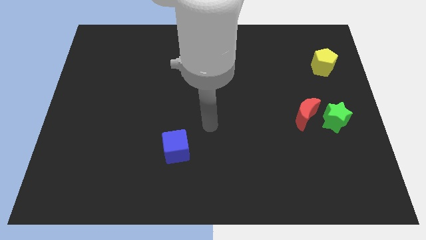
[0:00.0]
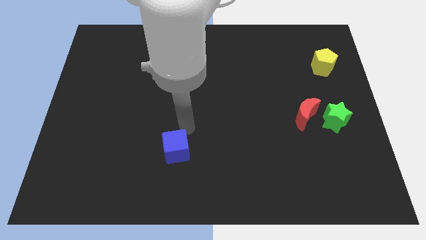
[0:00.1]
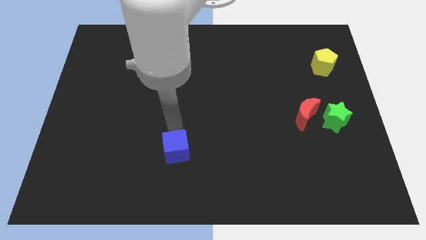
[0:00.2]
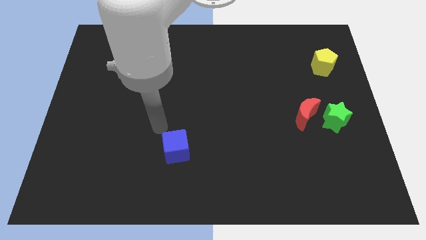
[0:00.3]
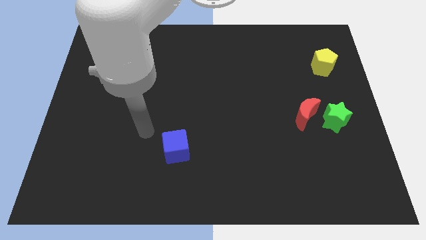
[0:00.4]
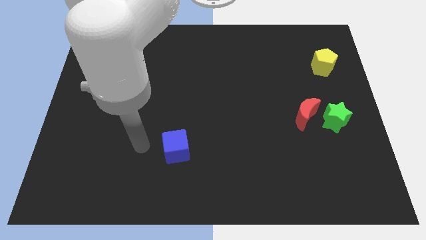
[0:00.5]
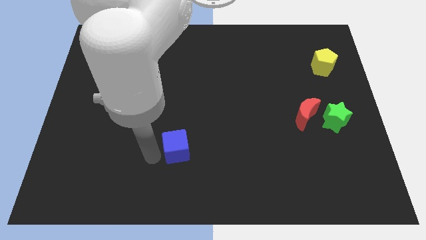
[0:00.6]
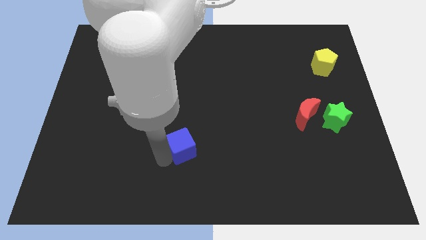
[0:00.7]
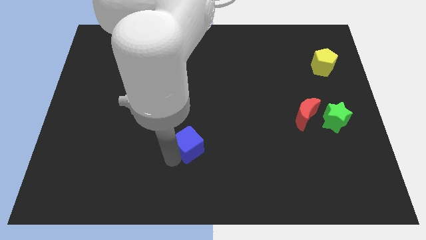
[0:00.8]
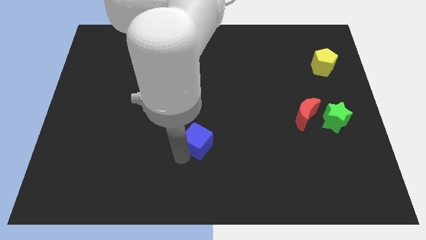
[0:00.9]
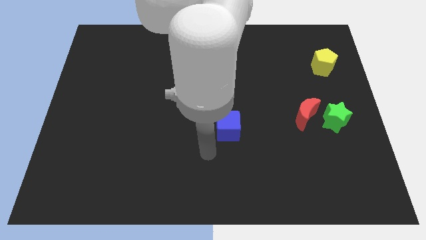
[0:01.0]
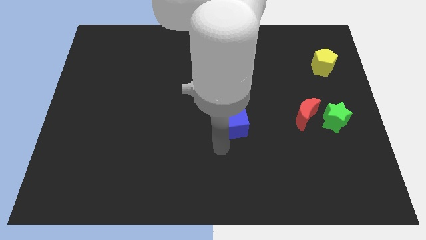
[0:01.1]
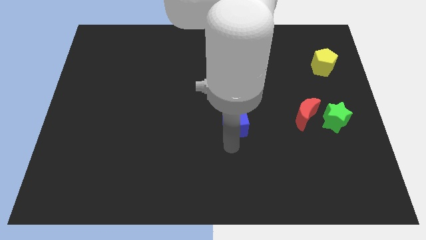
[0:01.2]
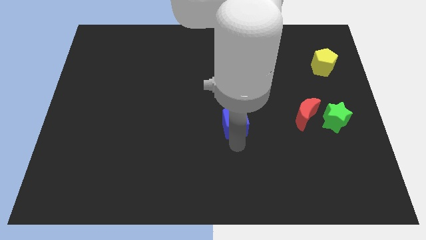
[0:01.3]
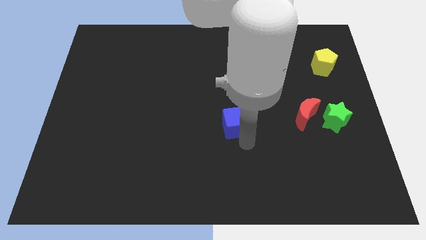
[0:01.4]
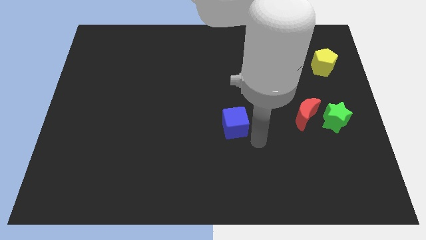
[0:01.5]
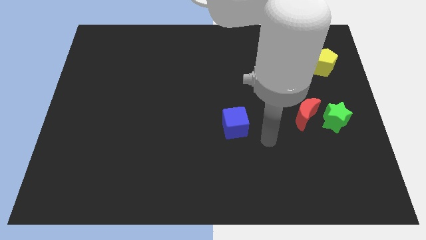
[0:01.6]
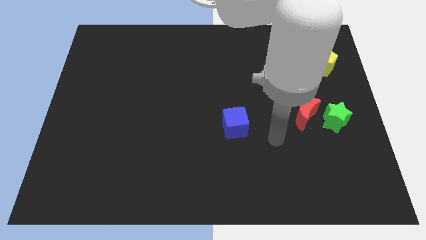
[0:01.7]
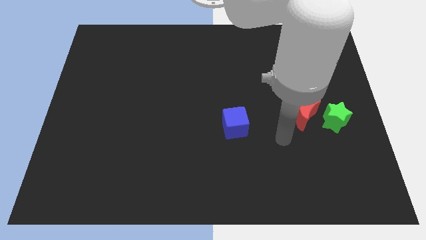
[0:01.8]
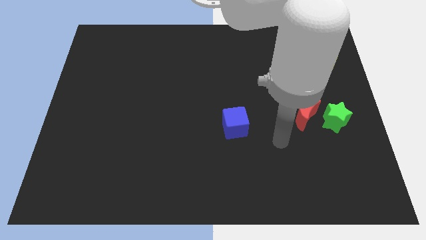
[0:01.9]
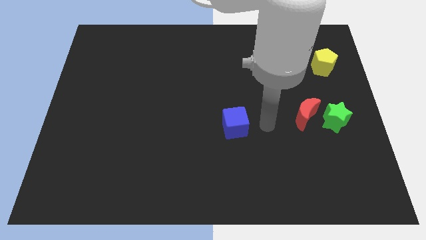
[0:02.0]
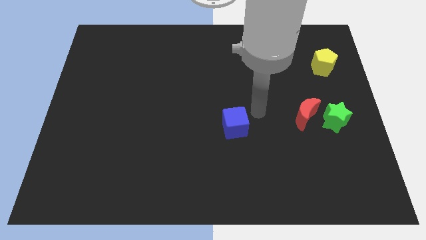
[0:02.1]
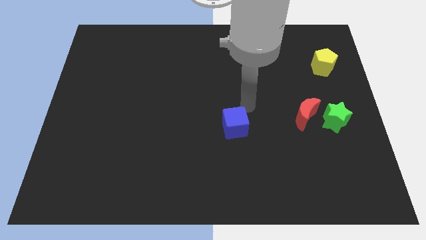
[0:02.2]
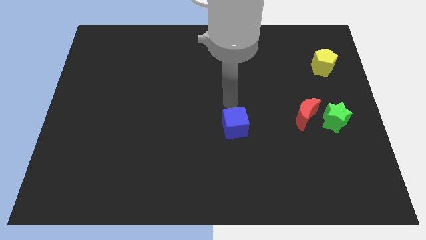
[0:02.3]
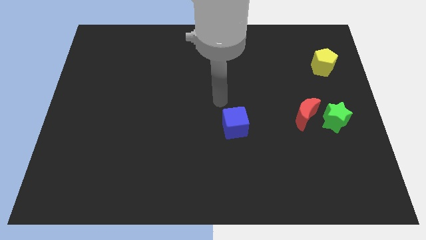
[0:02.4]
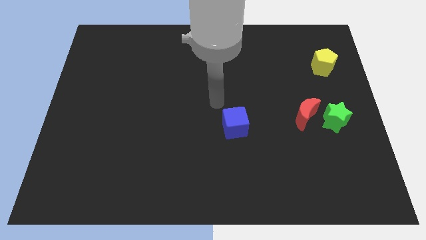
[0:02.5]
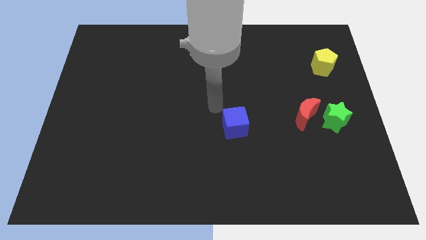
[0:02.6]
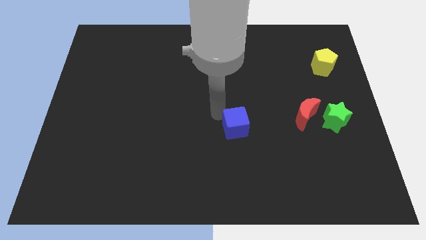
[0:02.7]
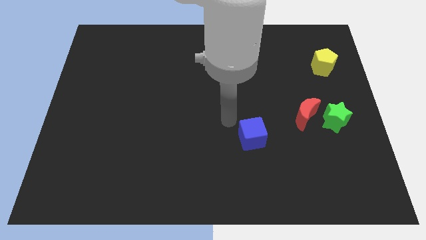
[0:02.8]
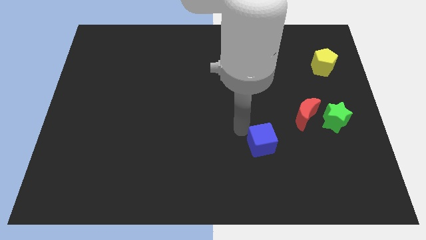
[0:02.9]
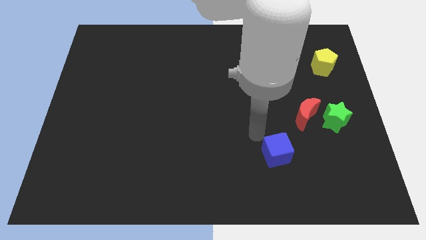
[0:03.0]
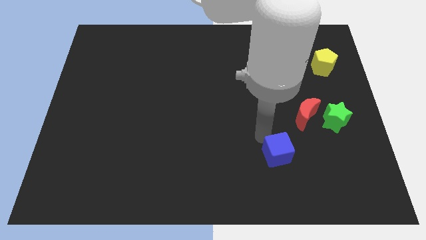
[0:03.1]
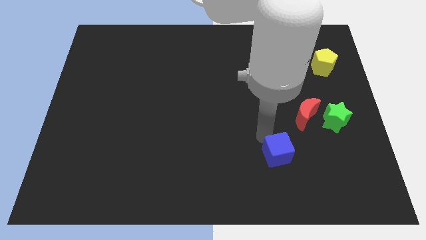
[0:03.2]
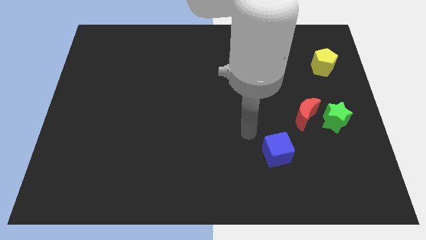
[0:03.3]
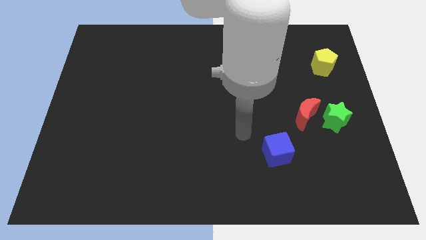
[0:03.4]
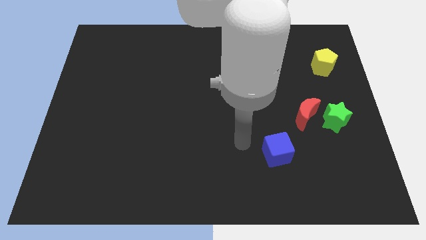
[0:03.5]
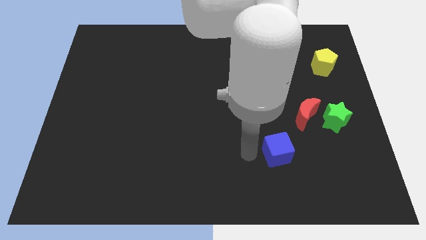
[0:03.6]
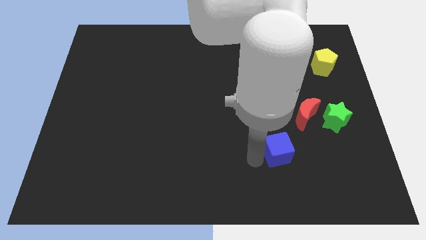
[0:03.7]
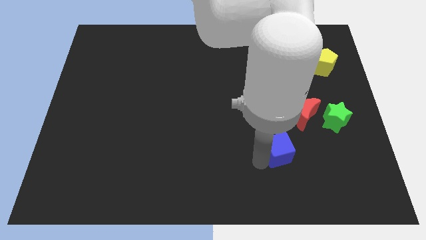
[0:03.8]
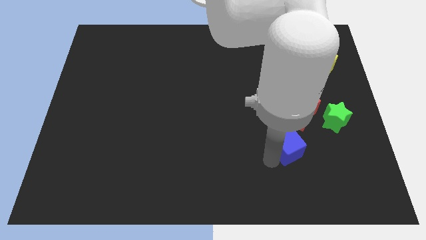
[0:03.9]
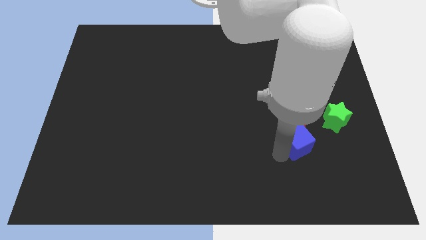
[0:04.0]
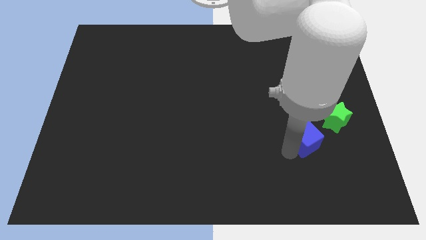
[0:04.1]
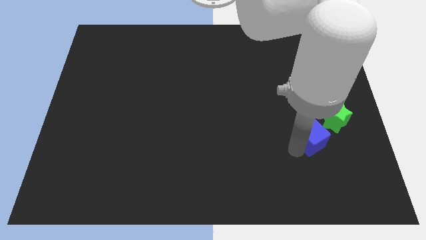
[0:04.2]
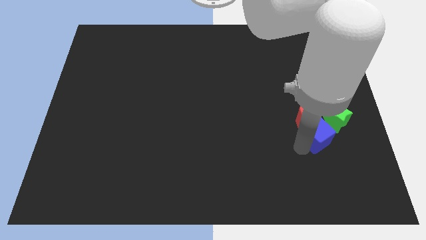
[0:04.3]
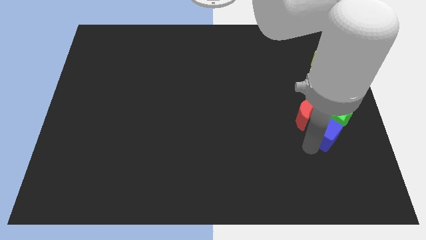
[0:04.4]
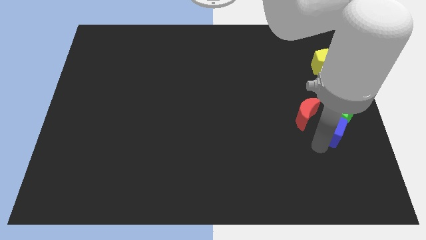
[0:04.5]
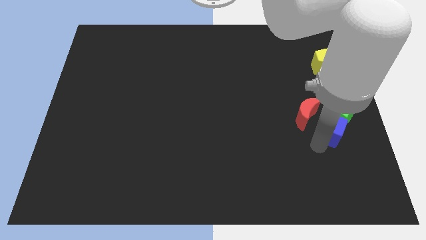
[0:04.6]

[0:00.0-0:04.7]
put the blue cube next to the green block

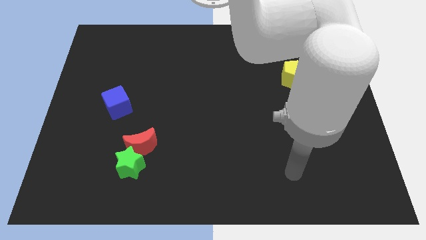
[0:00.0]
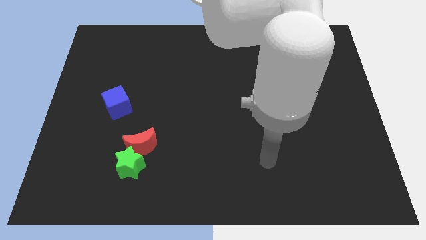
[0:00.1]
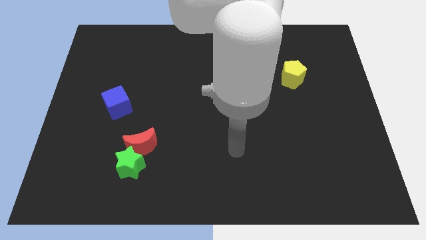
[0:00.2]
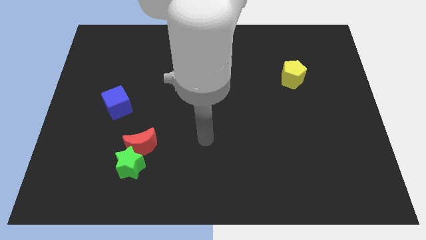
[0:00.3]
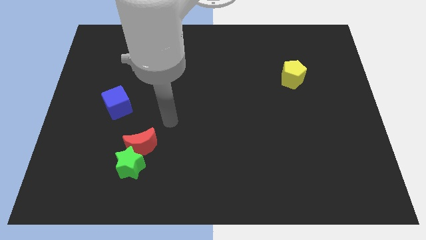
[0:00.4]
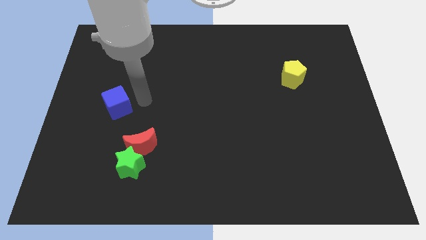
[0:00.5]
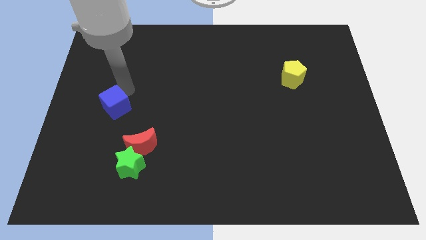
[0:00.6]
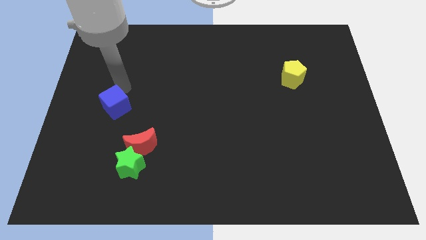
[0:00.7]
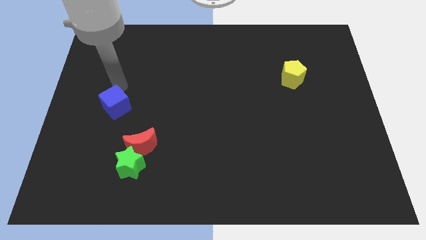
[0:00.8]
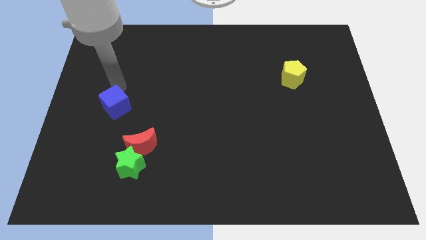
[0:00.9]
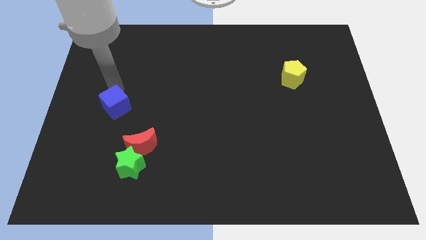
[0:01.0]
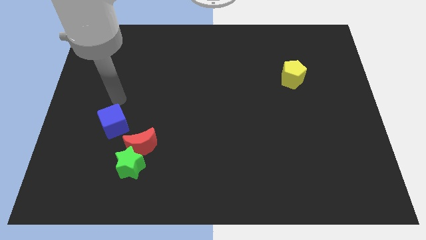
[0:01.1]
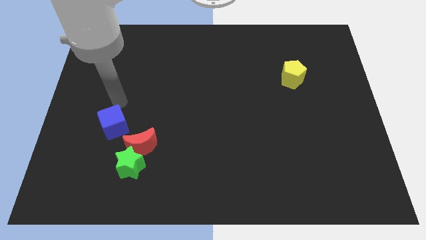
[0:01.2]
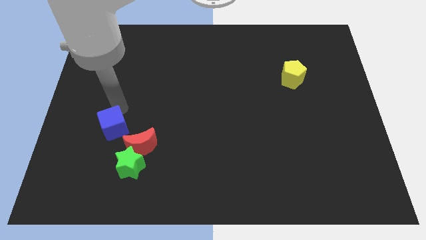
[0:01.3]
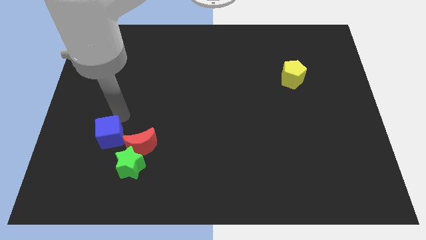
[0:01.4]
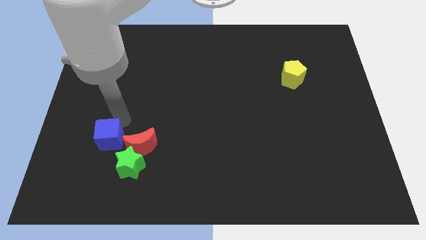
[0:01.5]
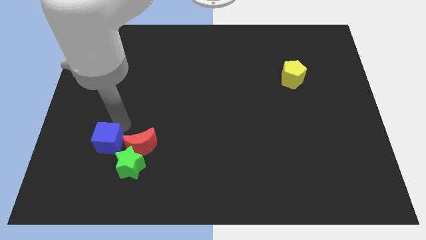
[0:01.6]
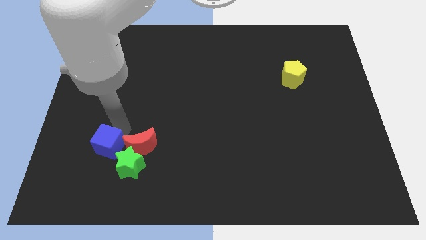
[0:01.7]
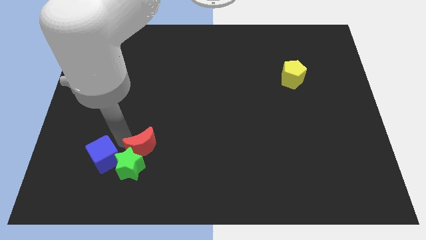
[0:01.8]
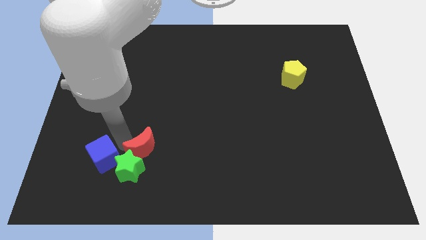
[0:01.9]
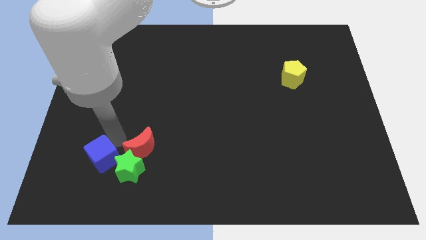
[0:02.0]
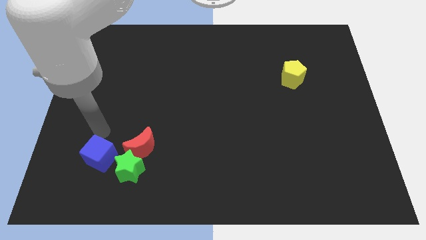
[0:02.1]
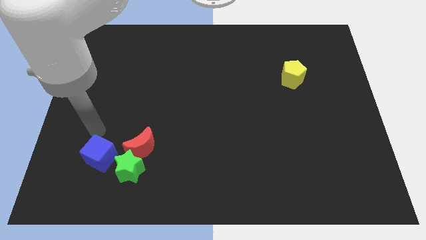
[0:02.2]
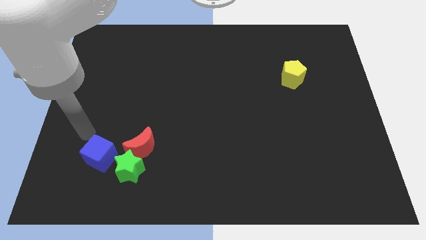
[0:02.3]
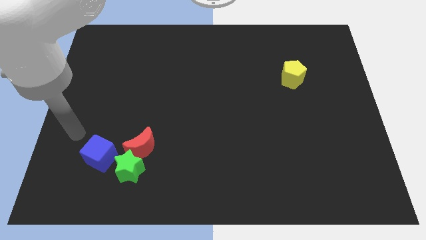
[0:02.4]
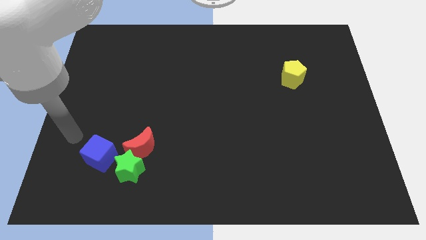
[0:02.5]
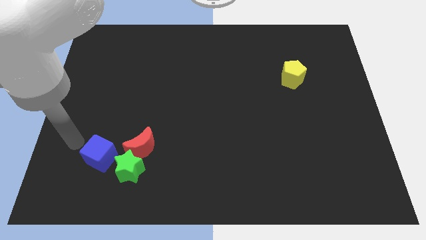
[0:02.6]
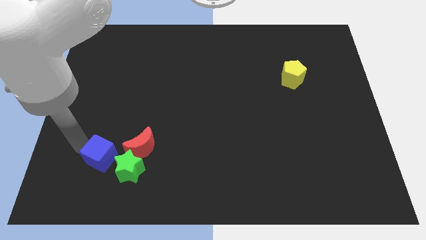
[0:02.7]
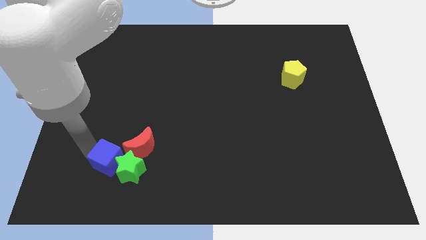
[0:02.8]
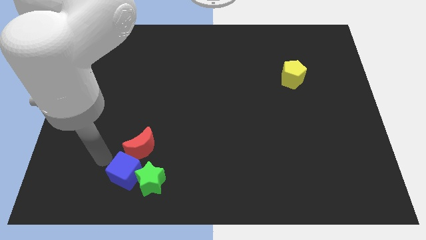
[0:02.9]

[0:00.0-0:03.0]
put the cube to the green block

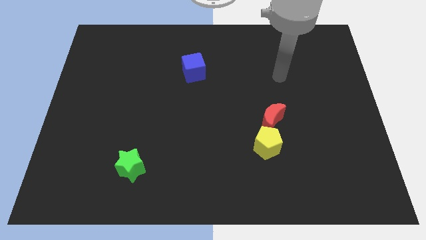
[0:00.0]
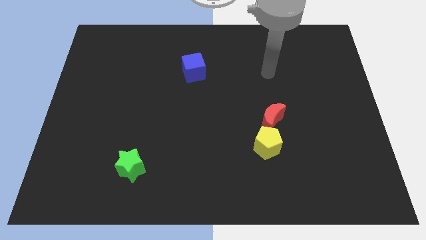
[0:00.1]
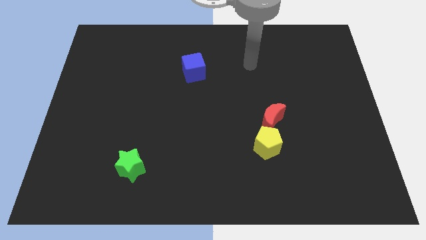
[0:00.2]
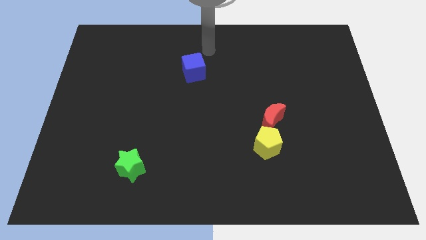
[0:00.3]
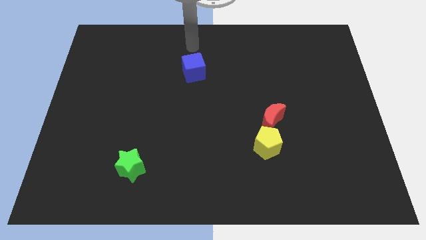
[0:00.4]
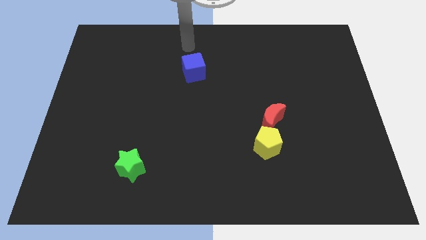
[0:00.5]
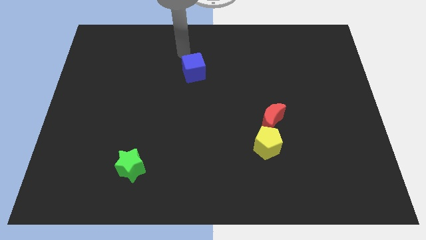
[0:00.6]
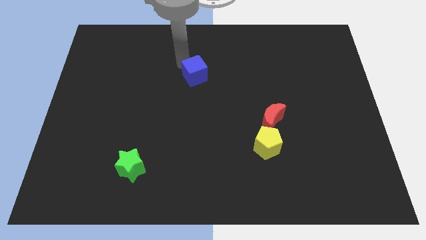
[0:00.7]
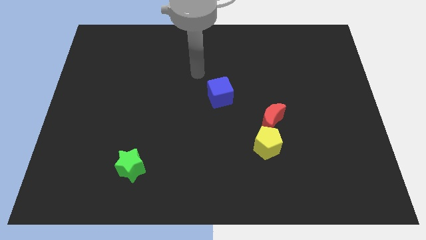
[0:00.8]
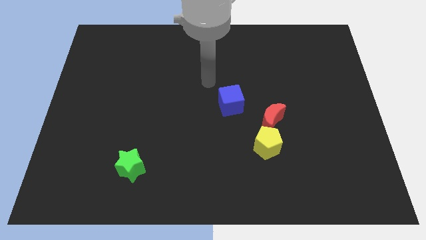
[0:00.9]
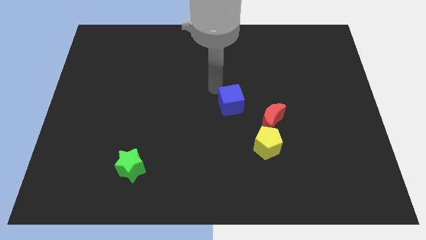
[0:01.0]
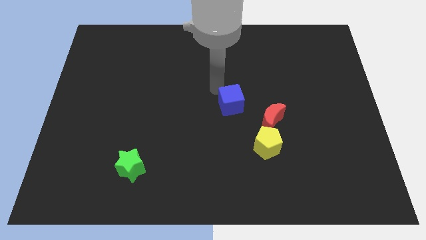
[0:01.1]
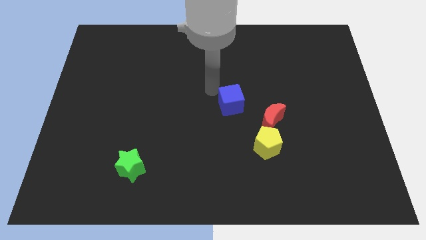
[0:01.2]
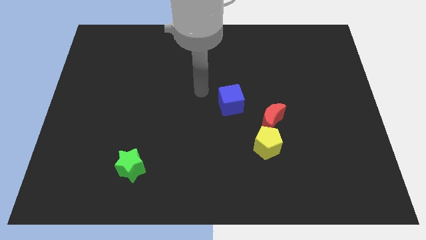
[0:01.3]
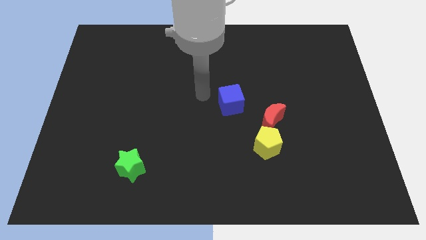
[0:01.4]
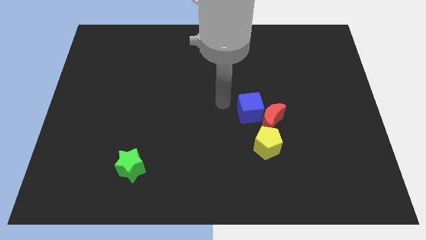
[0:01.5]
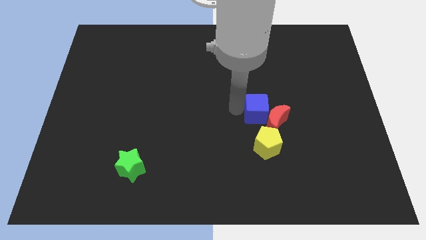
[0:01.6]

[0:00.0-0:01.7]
push the blue cube towards the red moon
